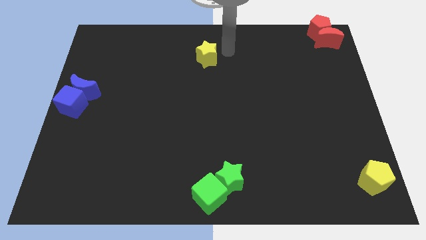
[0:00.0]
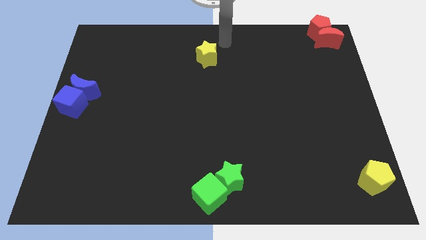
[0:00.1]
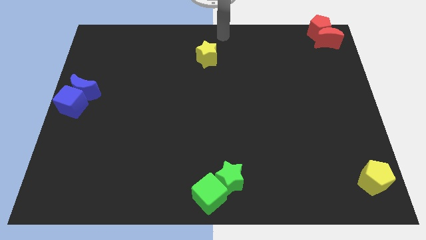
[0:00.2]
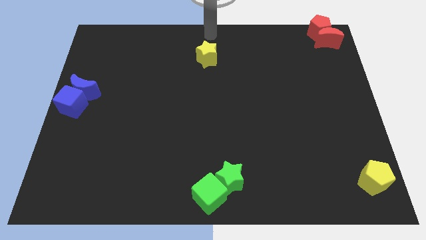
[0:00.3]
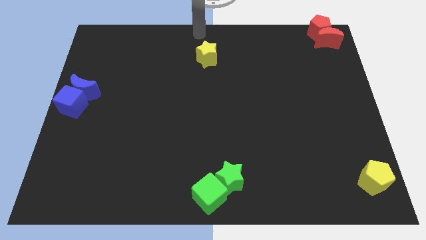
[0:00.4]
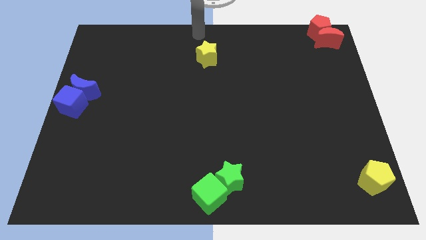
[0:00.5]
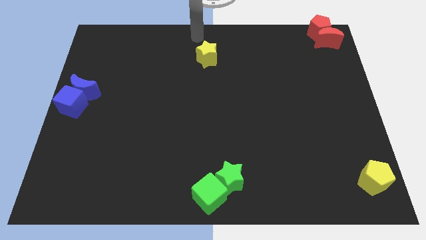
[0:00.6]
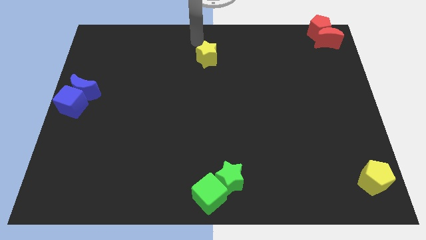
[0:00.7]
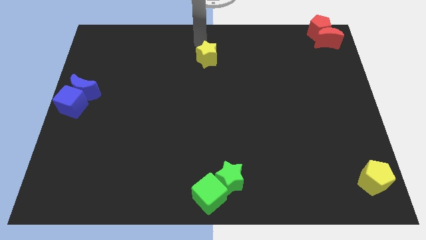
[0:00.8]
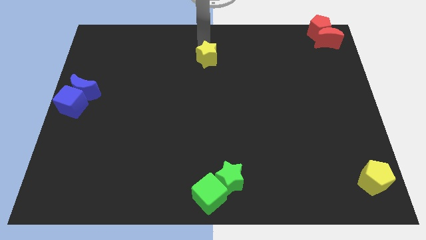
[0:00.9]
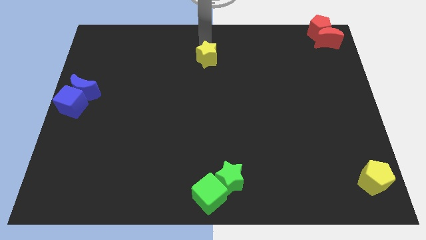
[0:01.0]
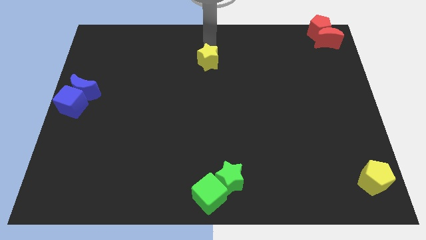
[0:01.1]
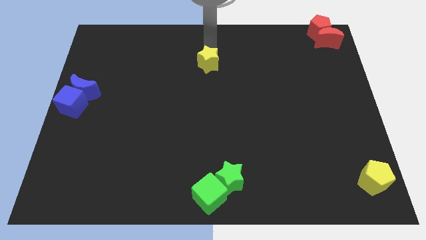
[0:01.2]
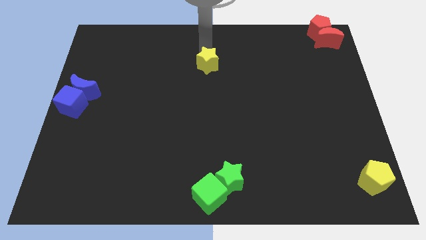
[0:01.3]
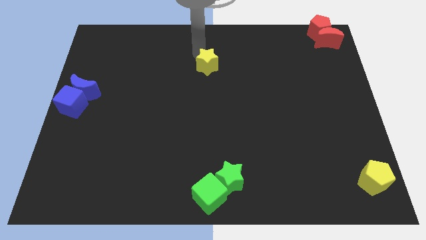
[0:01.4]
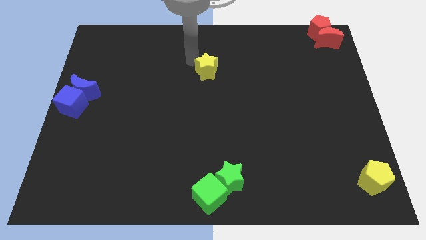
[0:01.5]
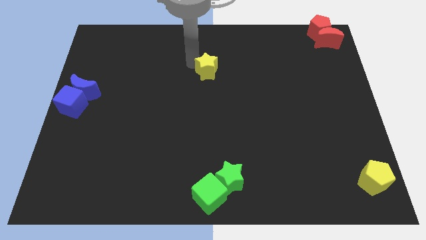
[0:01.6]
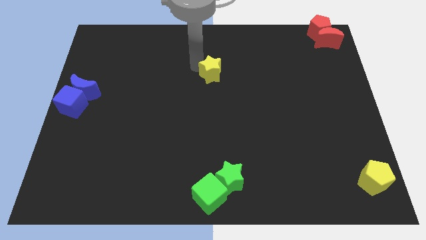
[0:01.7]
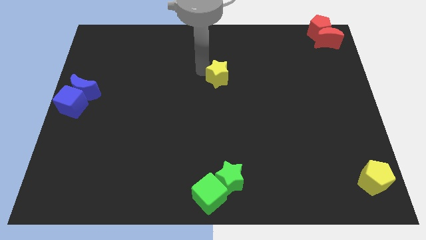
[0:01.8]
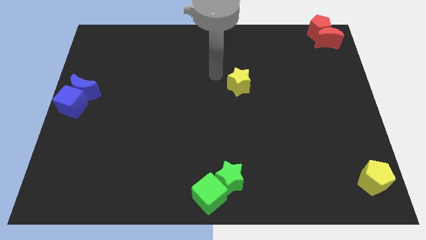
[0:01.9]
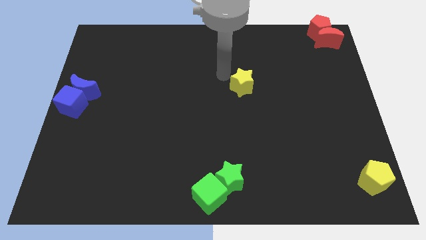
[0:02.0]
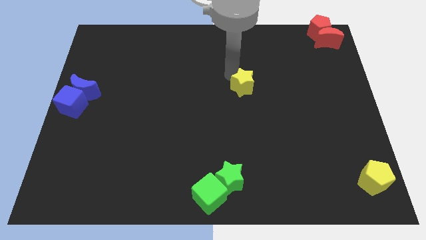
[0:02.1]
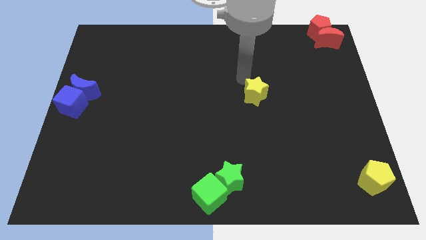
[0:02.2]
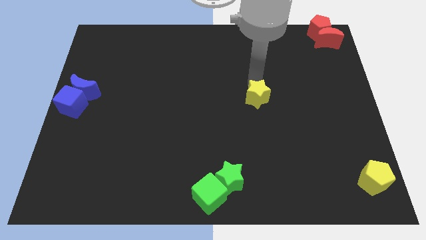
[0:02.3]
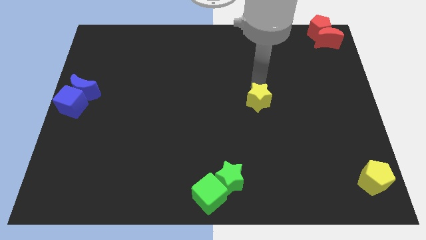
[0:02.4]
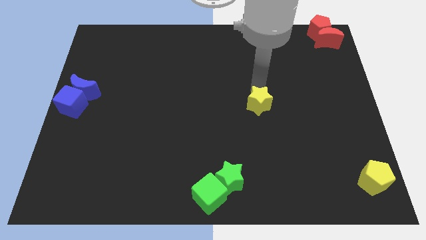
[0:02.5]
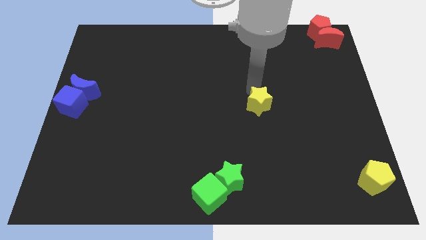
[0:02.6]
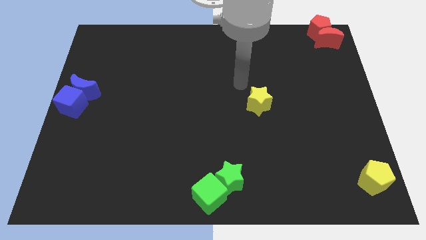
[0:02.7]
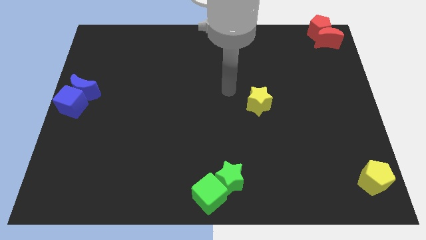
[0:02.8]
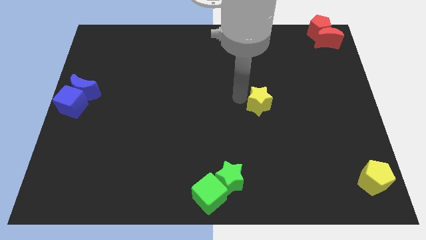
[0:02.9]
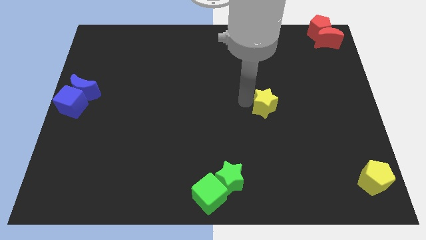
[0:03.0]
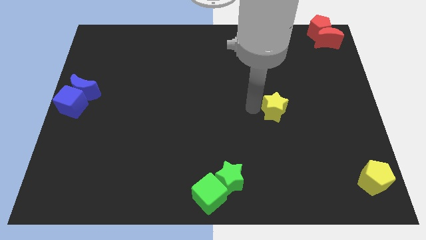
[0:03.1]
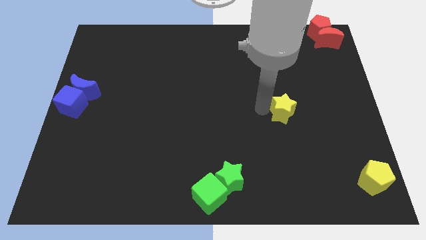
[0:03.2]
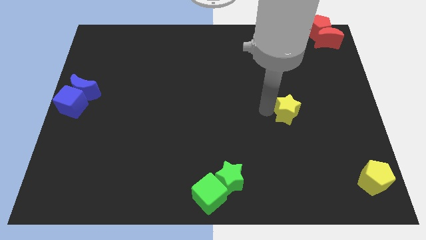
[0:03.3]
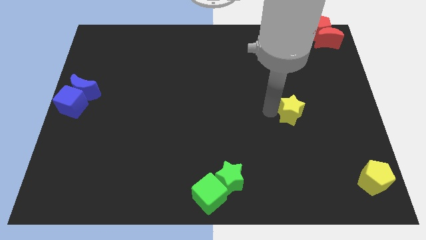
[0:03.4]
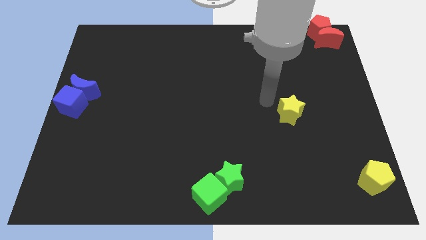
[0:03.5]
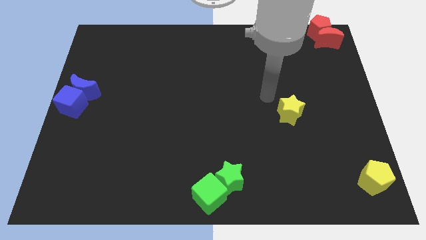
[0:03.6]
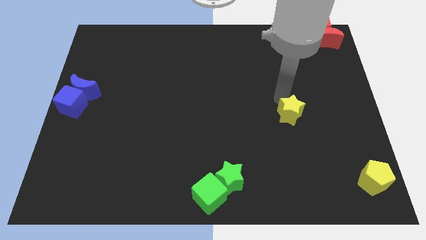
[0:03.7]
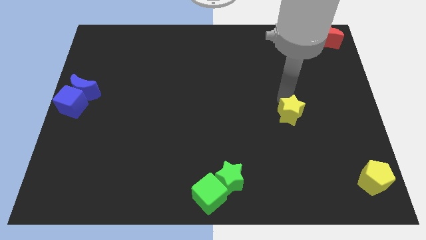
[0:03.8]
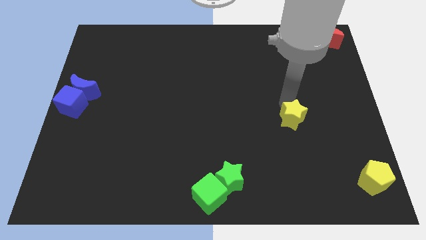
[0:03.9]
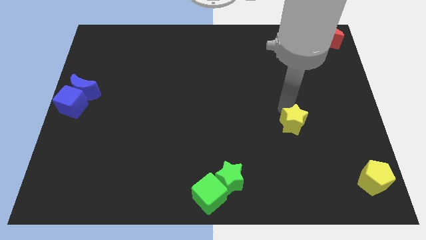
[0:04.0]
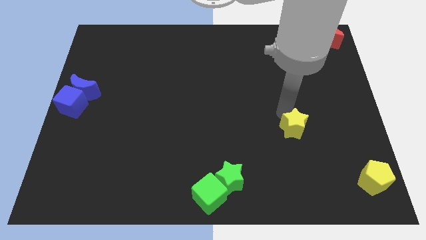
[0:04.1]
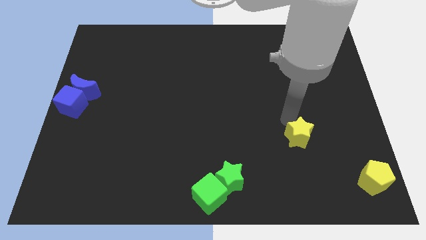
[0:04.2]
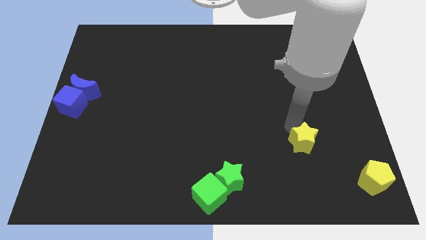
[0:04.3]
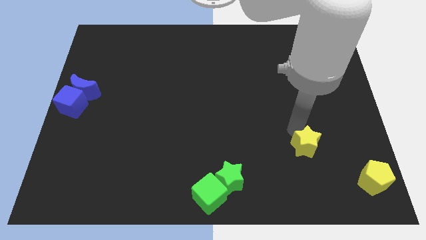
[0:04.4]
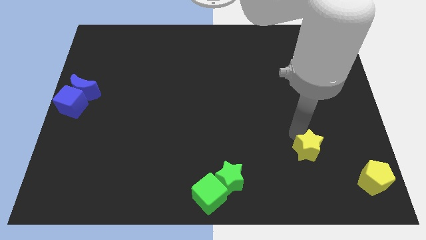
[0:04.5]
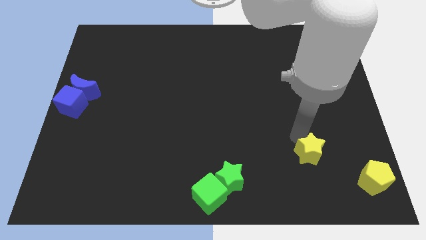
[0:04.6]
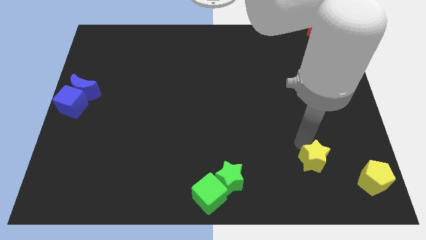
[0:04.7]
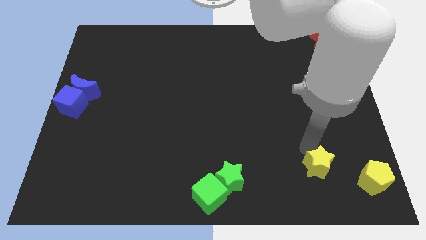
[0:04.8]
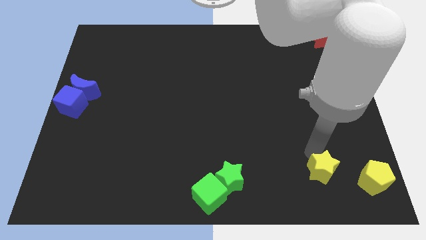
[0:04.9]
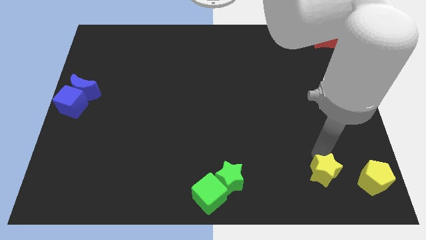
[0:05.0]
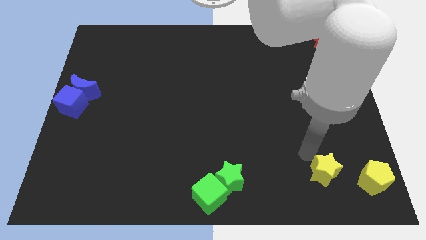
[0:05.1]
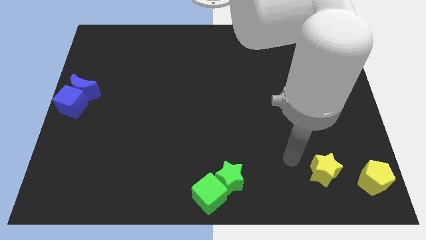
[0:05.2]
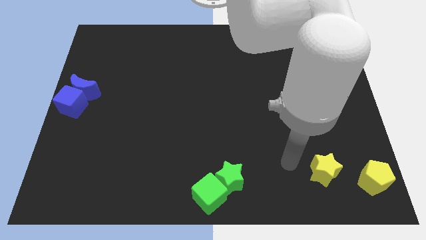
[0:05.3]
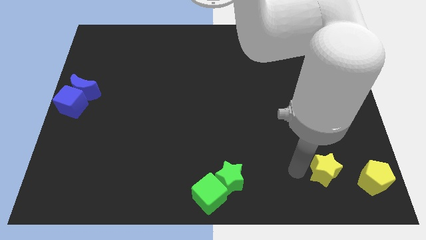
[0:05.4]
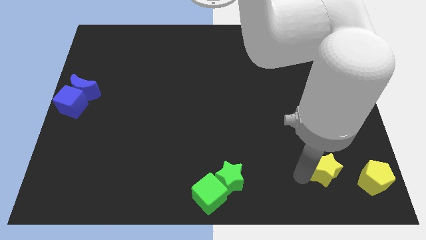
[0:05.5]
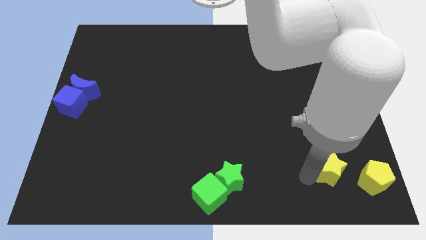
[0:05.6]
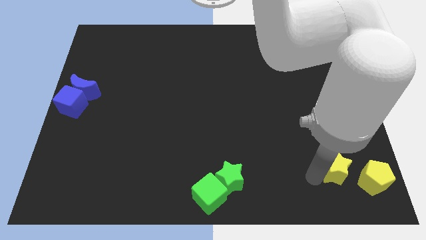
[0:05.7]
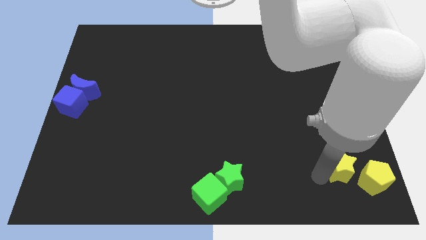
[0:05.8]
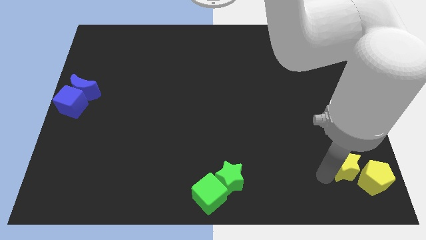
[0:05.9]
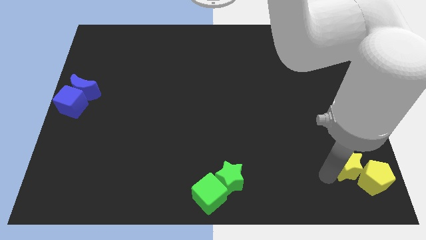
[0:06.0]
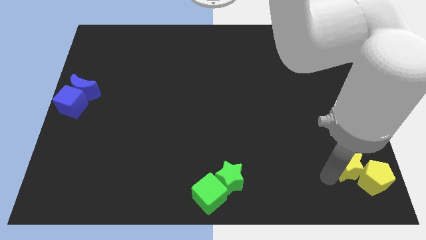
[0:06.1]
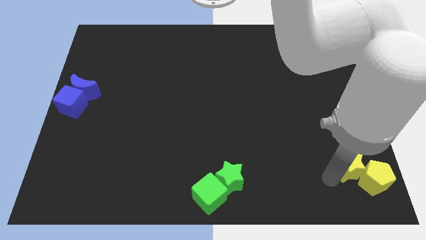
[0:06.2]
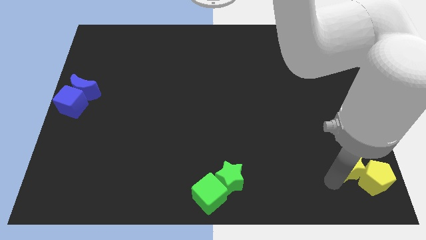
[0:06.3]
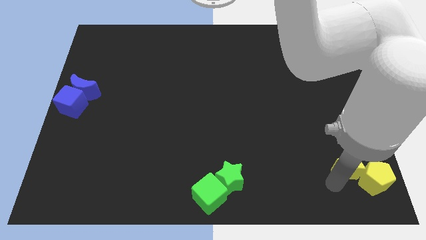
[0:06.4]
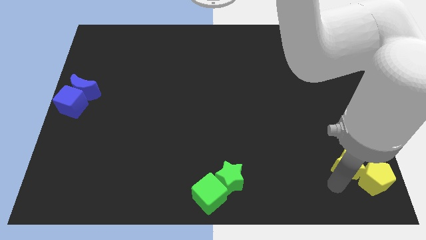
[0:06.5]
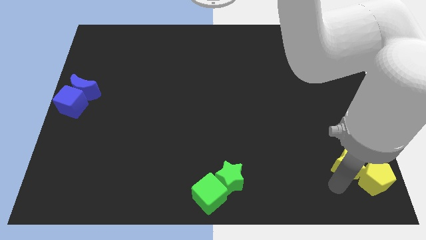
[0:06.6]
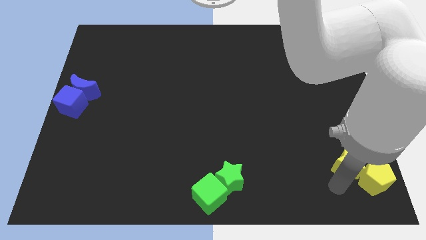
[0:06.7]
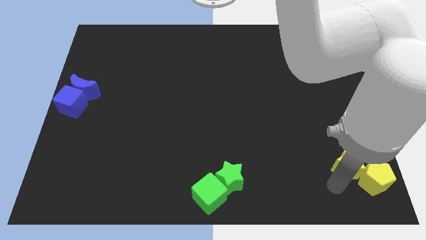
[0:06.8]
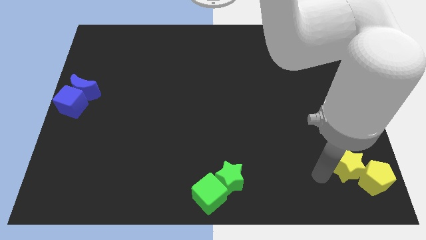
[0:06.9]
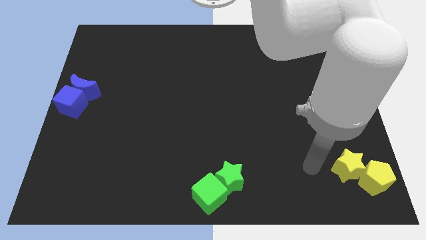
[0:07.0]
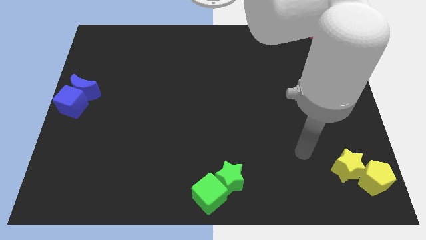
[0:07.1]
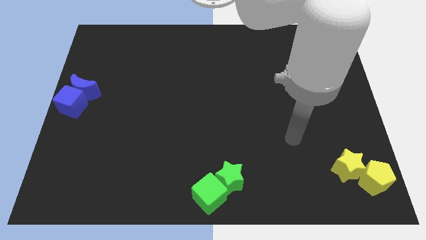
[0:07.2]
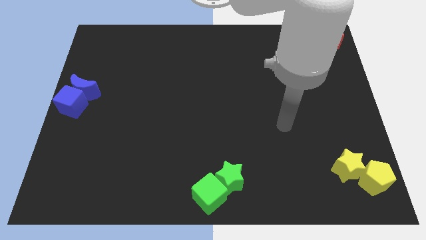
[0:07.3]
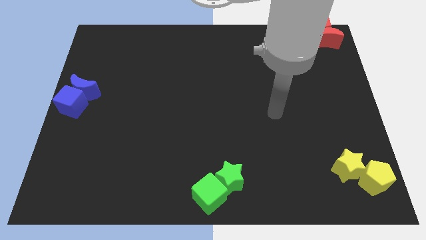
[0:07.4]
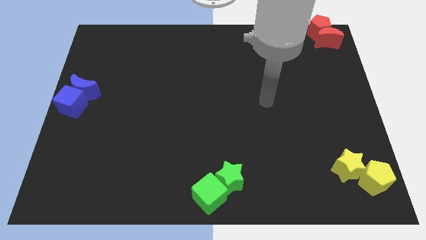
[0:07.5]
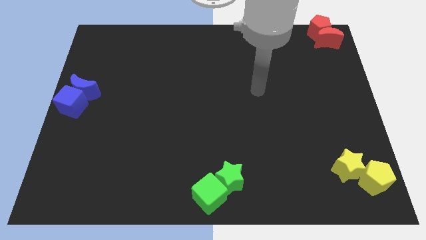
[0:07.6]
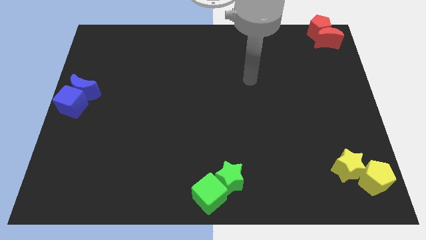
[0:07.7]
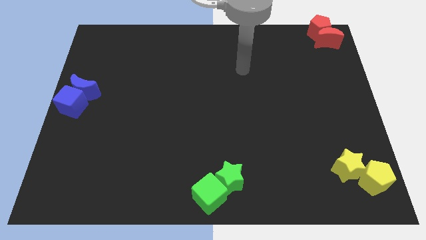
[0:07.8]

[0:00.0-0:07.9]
move the yellow star to the top left of the yellow pentagon

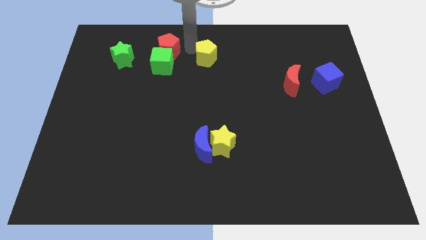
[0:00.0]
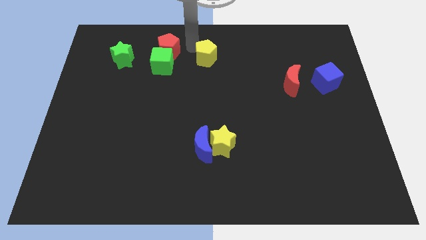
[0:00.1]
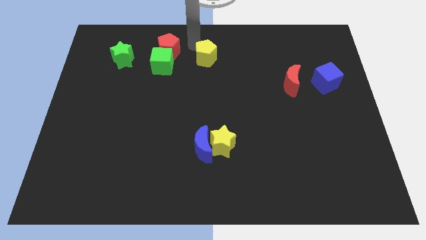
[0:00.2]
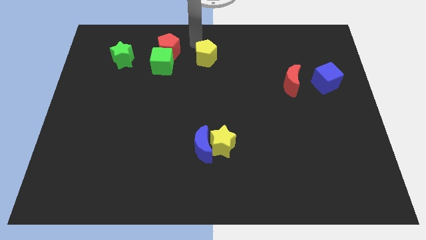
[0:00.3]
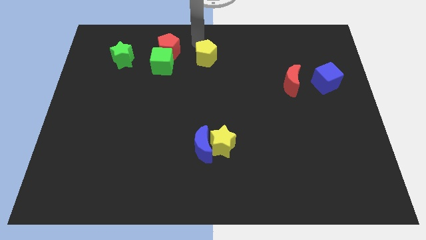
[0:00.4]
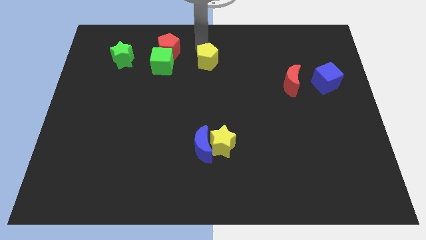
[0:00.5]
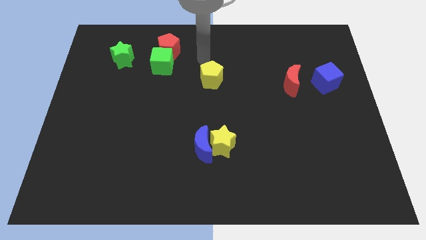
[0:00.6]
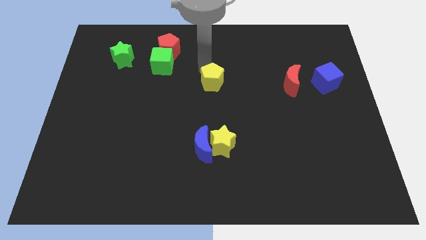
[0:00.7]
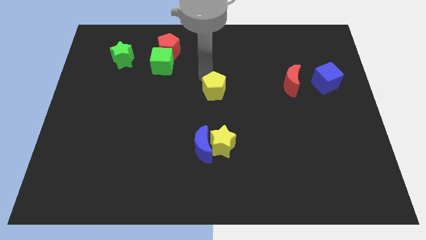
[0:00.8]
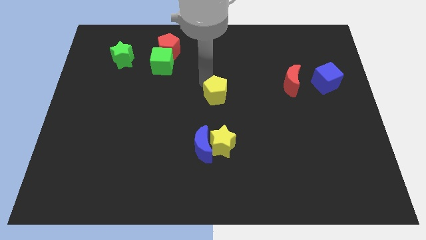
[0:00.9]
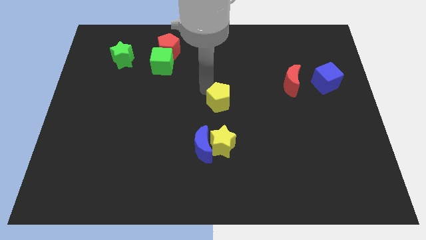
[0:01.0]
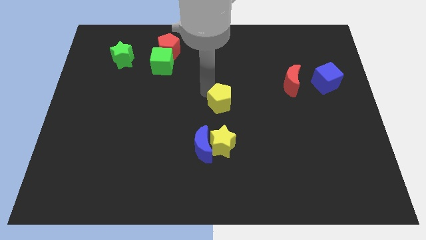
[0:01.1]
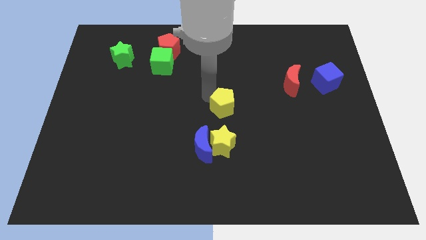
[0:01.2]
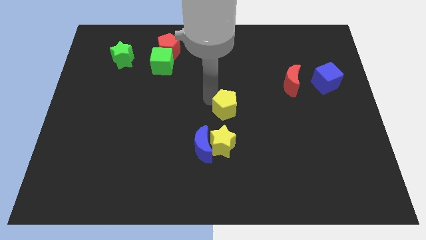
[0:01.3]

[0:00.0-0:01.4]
place the yellow pentagon at the center
